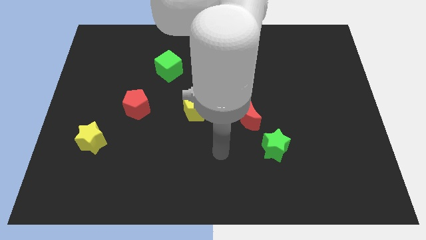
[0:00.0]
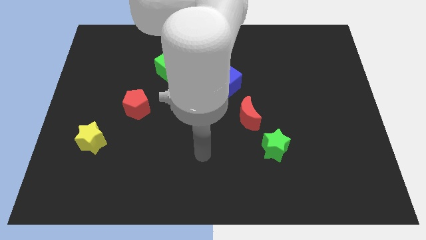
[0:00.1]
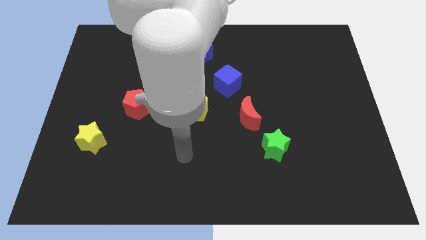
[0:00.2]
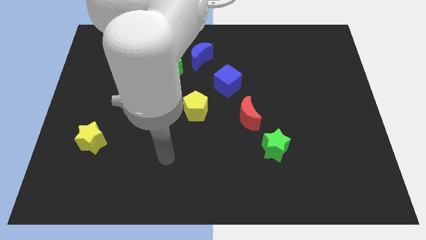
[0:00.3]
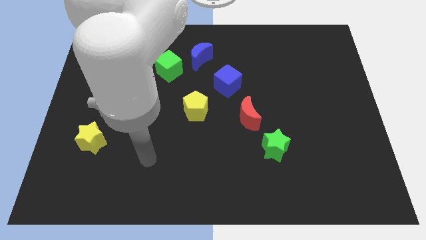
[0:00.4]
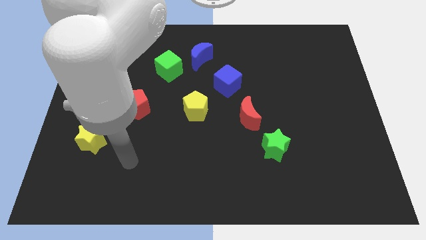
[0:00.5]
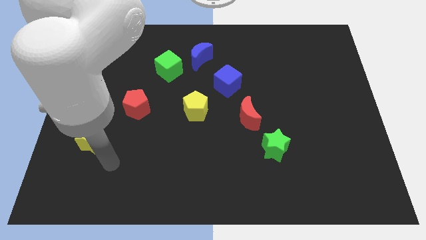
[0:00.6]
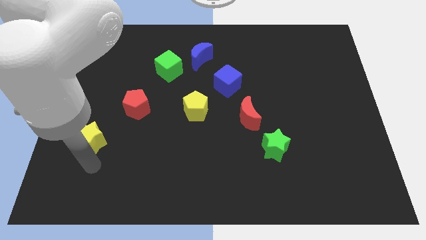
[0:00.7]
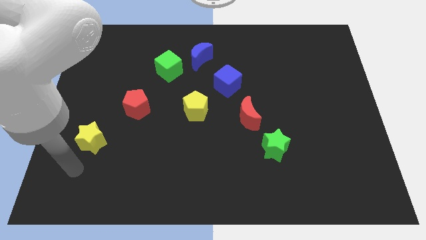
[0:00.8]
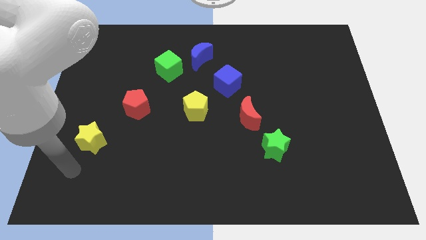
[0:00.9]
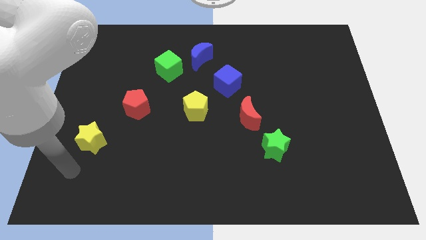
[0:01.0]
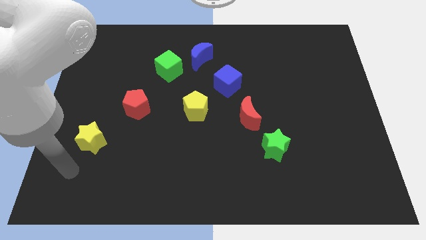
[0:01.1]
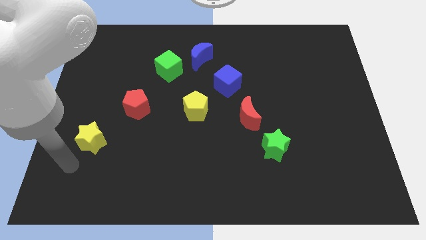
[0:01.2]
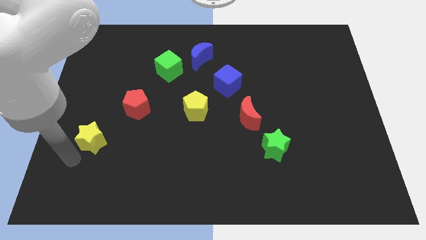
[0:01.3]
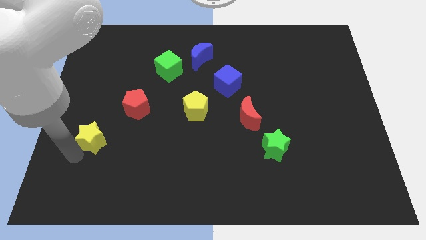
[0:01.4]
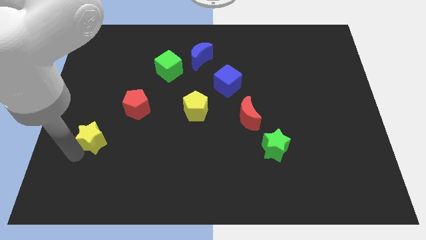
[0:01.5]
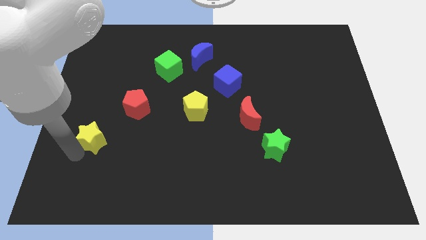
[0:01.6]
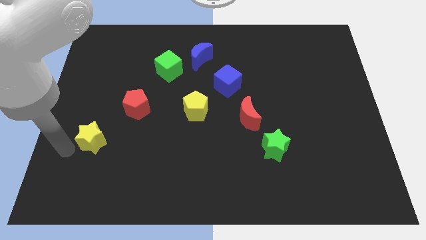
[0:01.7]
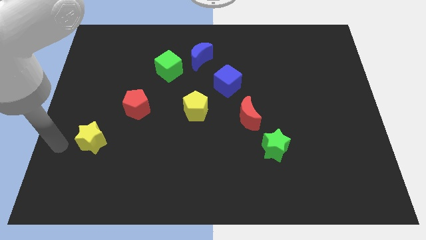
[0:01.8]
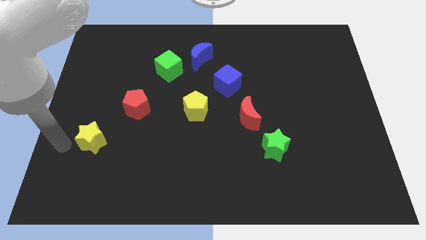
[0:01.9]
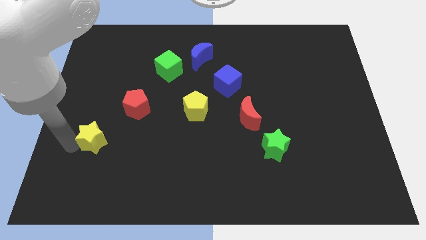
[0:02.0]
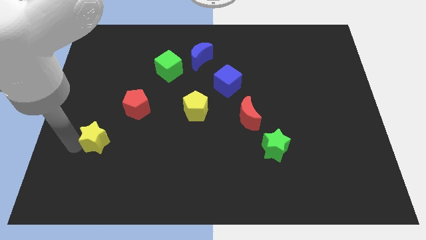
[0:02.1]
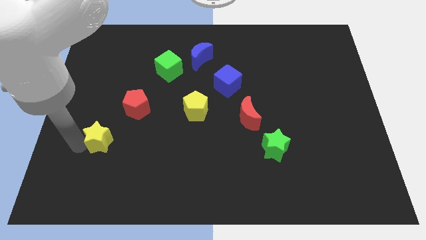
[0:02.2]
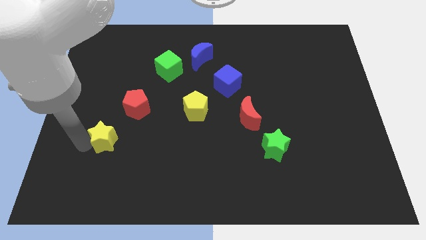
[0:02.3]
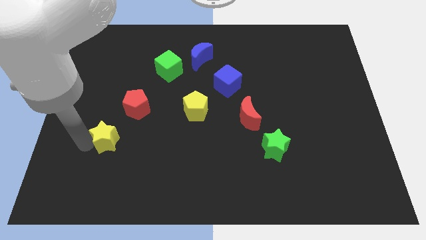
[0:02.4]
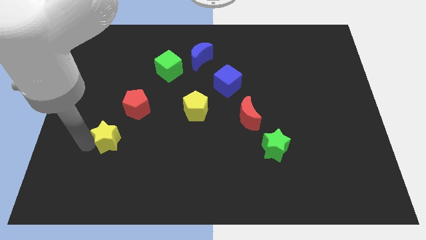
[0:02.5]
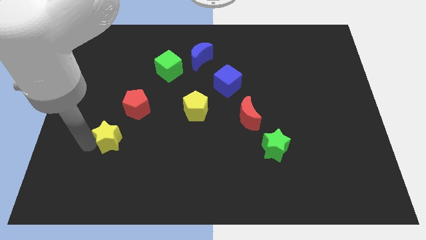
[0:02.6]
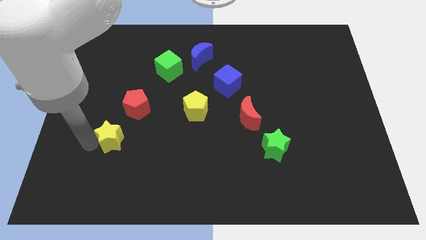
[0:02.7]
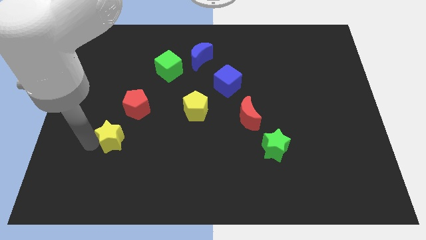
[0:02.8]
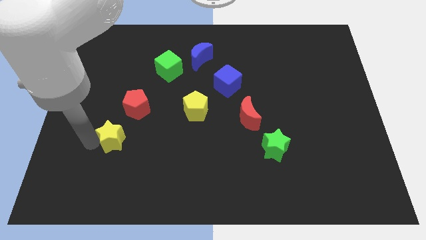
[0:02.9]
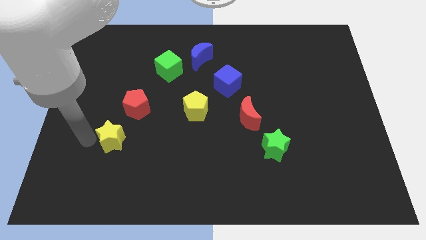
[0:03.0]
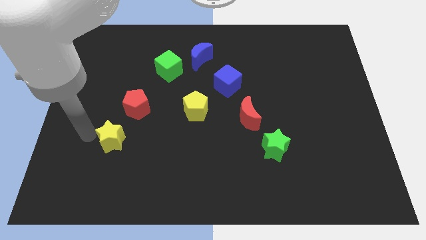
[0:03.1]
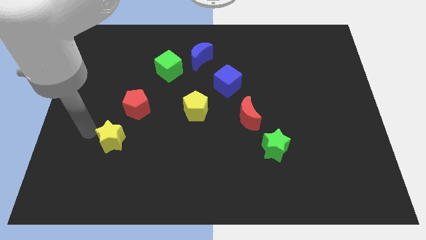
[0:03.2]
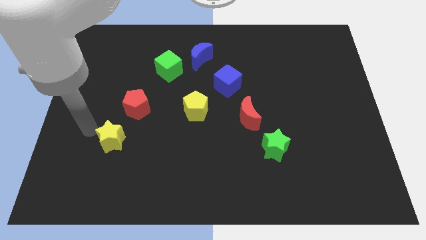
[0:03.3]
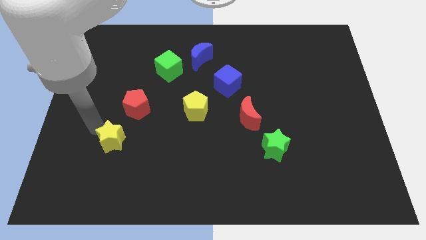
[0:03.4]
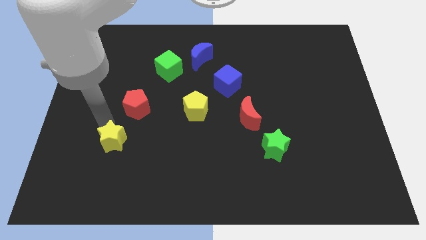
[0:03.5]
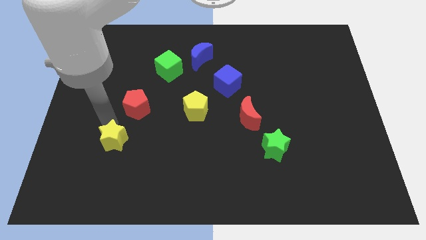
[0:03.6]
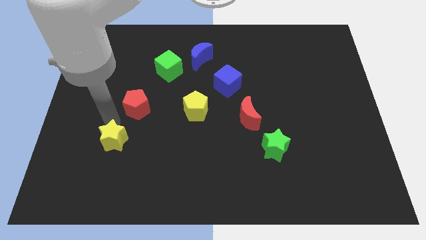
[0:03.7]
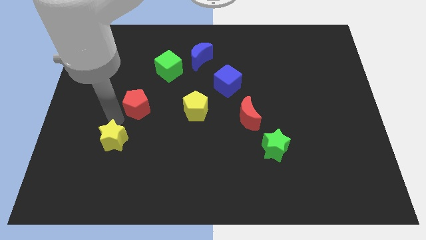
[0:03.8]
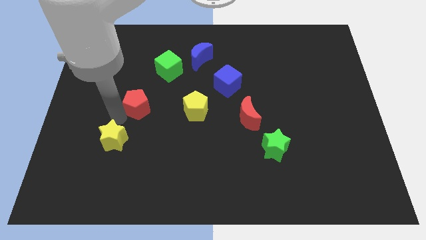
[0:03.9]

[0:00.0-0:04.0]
push the yellow star to the right side slightly

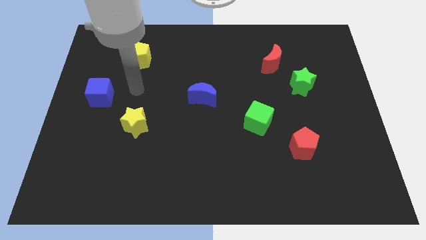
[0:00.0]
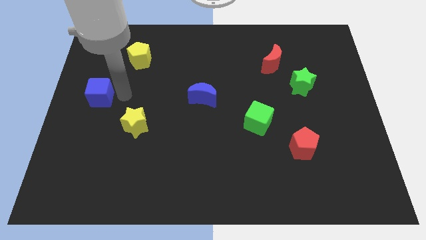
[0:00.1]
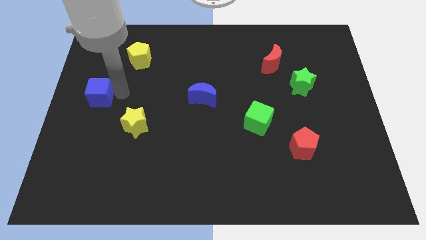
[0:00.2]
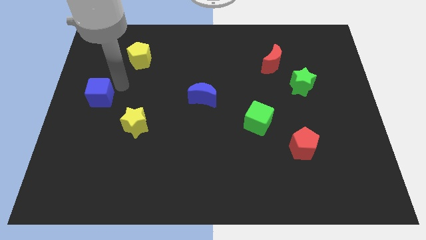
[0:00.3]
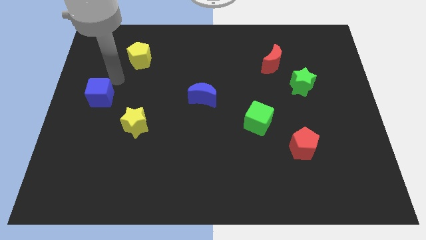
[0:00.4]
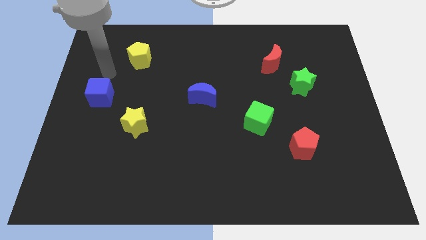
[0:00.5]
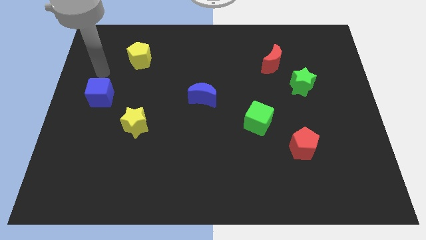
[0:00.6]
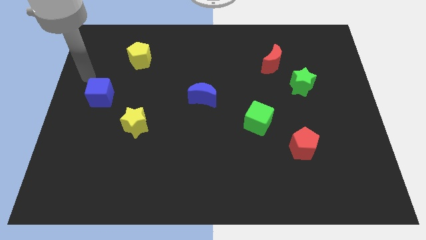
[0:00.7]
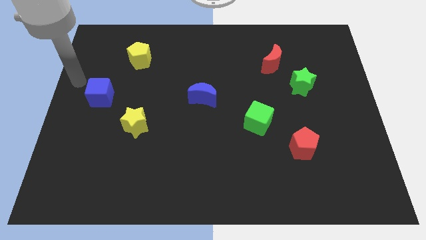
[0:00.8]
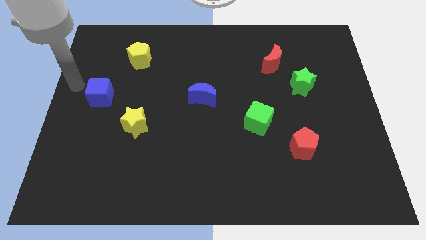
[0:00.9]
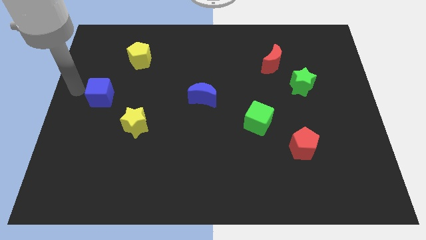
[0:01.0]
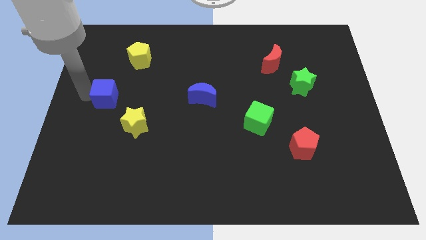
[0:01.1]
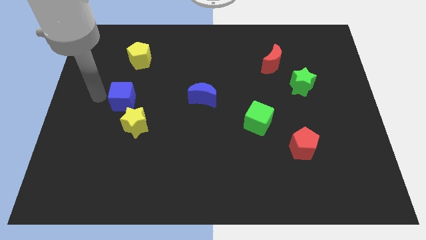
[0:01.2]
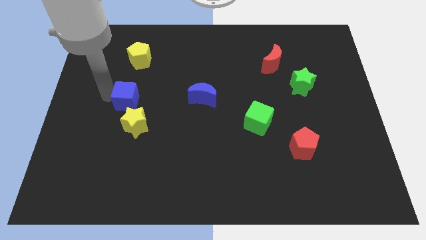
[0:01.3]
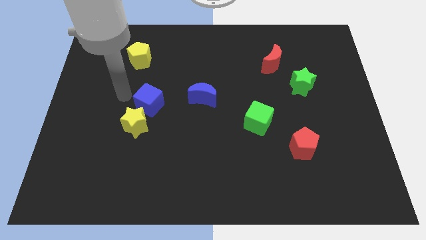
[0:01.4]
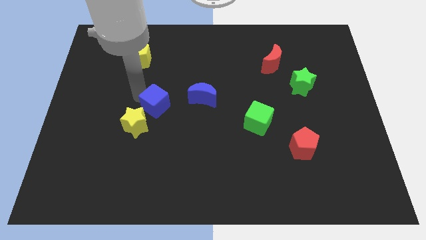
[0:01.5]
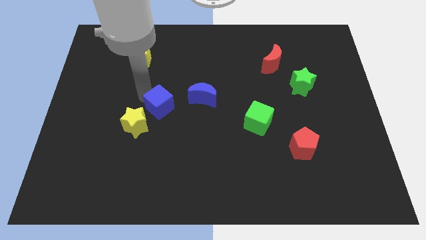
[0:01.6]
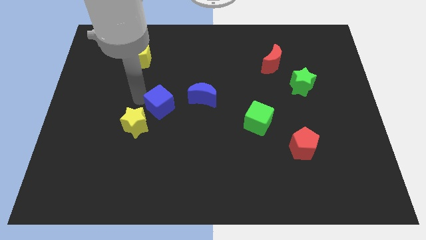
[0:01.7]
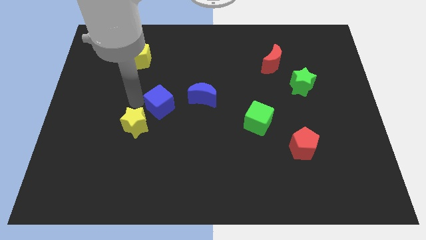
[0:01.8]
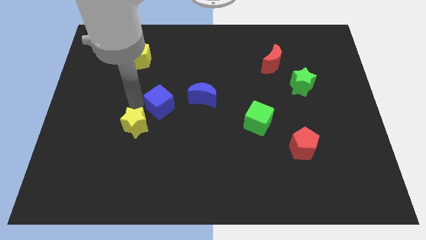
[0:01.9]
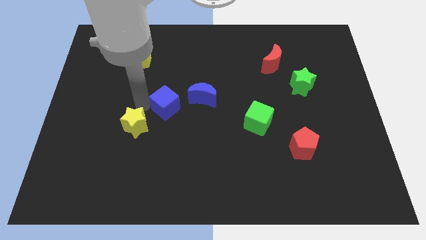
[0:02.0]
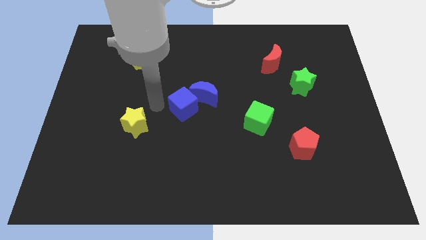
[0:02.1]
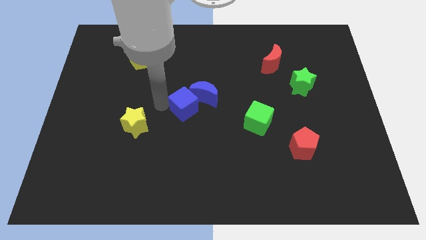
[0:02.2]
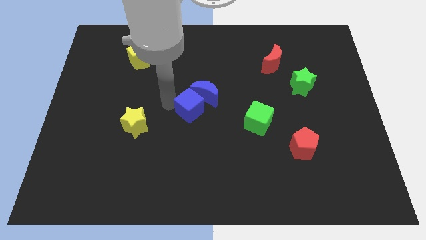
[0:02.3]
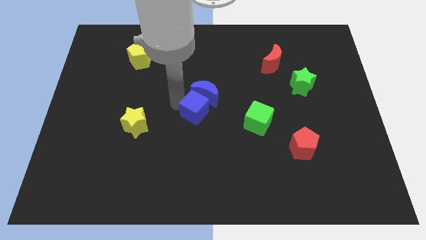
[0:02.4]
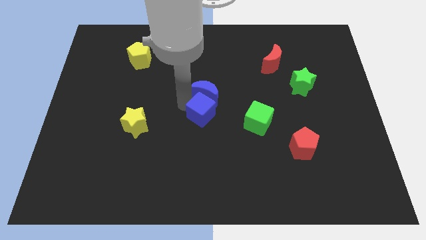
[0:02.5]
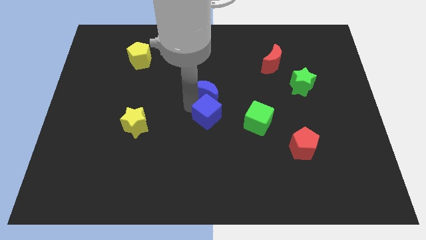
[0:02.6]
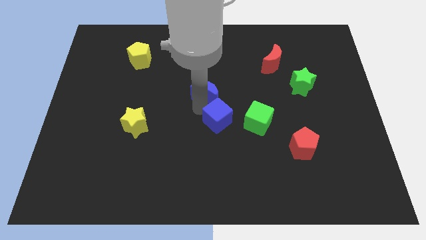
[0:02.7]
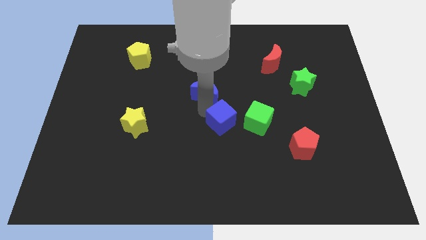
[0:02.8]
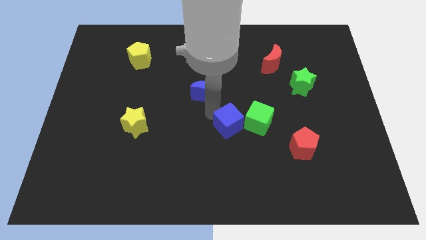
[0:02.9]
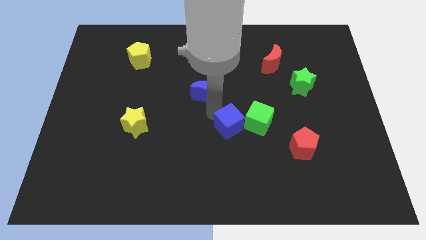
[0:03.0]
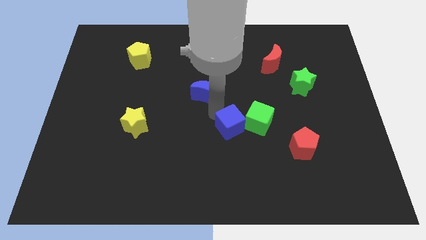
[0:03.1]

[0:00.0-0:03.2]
move the blue cube diagonal to the blue moon

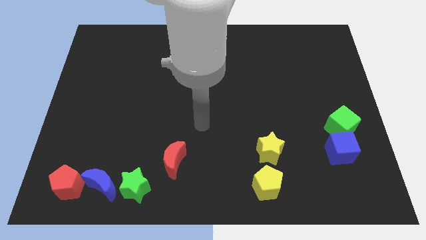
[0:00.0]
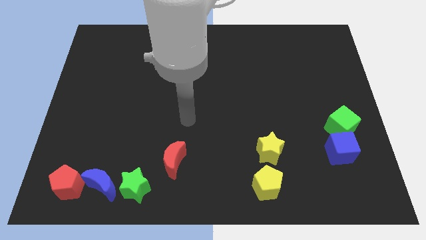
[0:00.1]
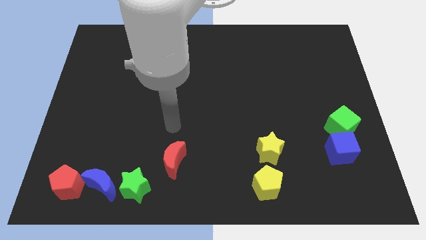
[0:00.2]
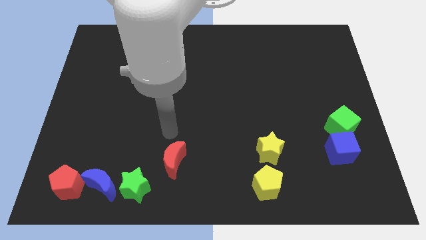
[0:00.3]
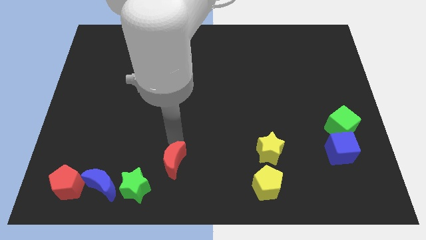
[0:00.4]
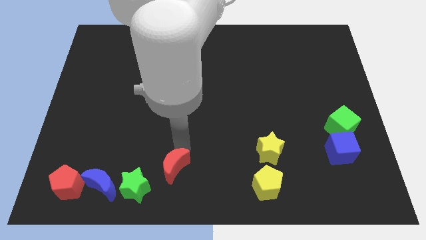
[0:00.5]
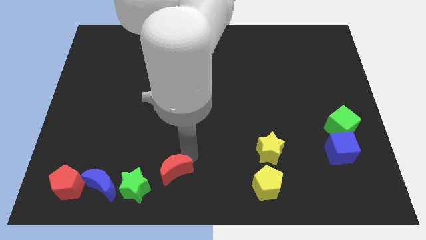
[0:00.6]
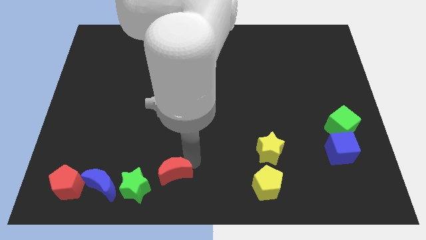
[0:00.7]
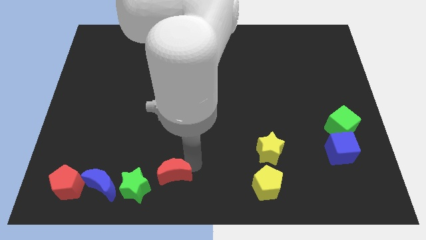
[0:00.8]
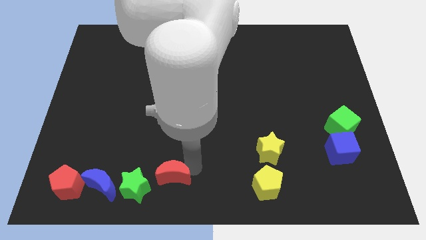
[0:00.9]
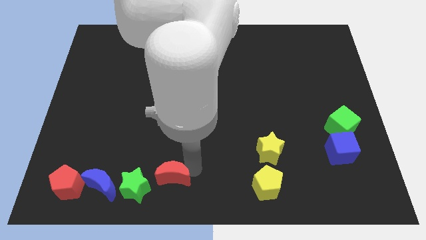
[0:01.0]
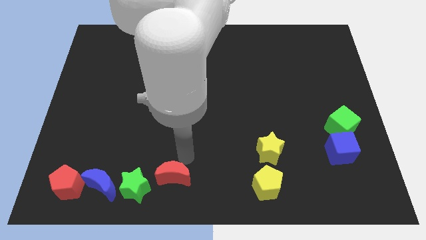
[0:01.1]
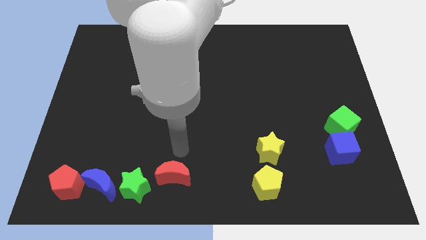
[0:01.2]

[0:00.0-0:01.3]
move the red crescent to the bottom center of the board

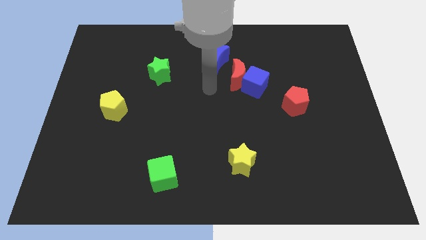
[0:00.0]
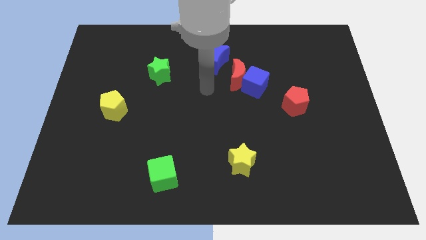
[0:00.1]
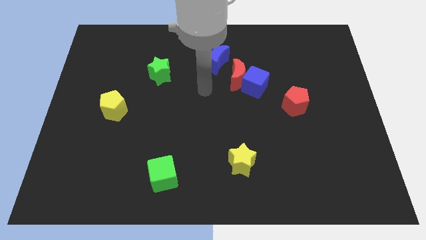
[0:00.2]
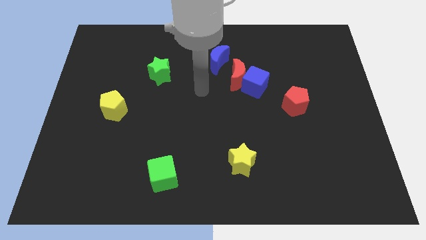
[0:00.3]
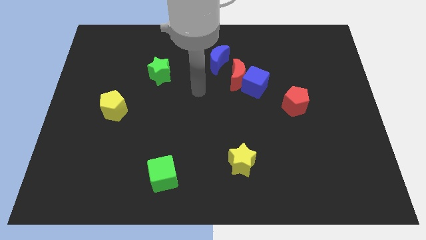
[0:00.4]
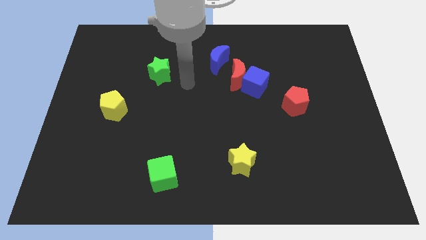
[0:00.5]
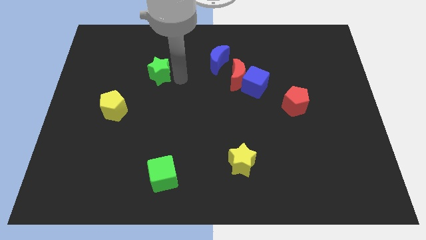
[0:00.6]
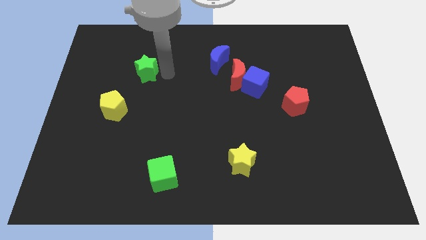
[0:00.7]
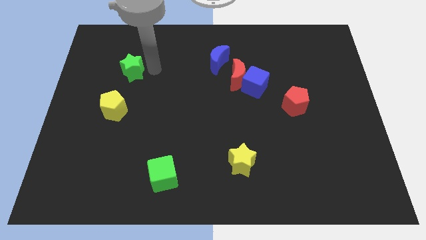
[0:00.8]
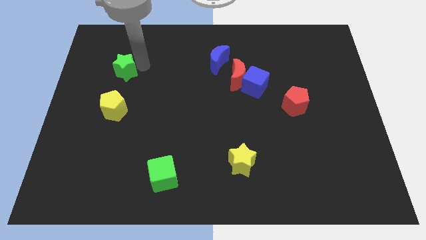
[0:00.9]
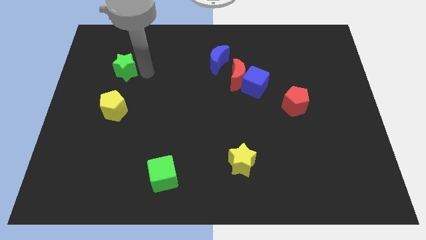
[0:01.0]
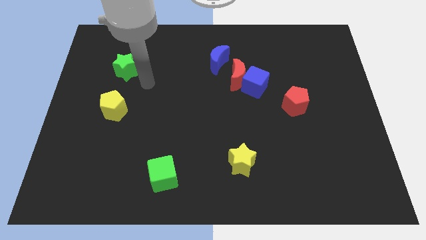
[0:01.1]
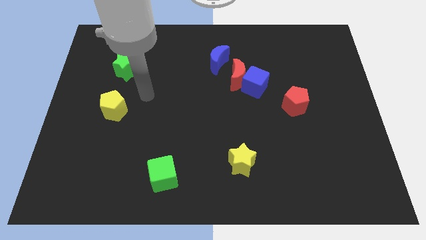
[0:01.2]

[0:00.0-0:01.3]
place the green star vertically above the top side of the yellow pentagon
